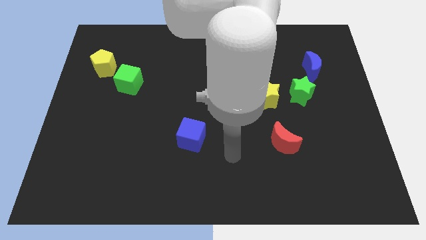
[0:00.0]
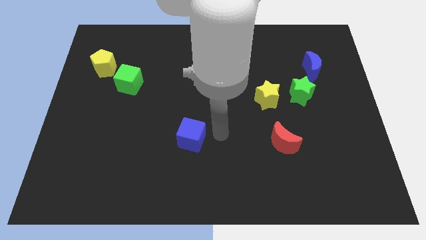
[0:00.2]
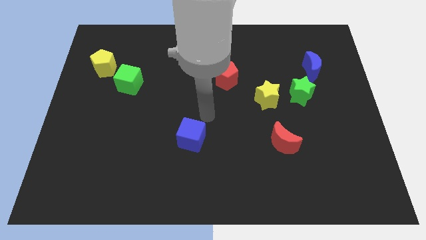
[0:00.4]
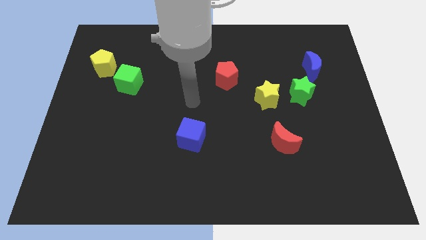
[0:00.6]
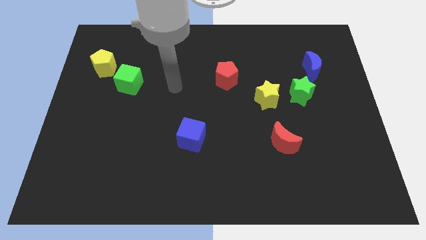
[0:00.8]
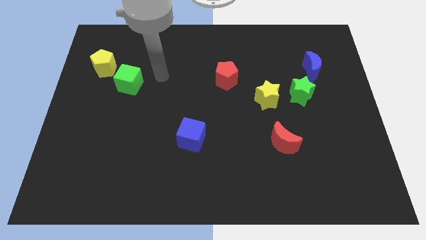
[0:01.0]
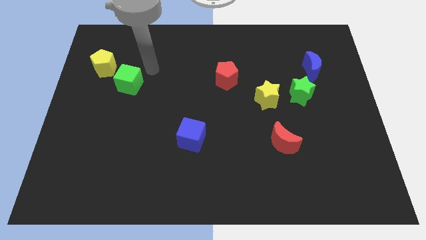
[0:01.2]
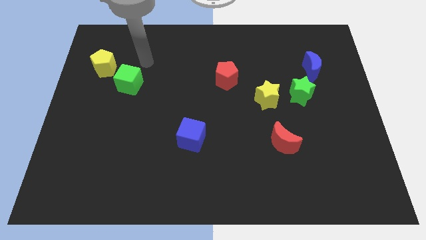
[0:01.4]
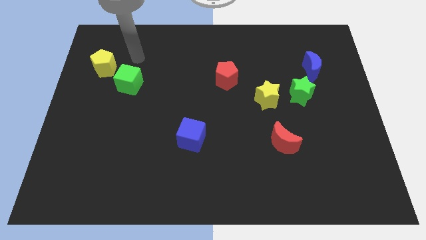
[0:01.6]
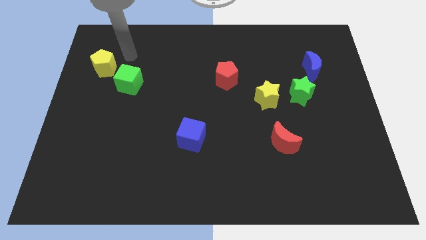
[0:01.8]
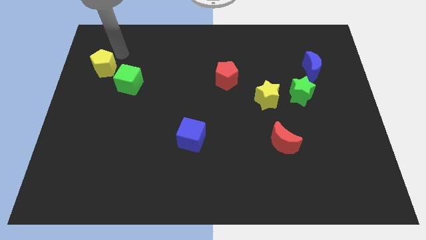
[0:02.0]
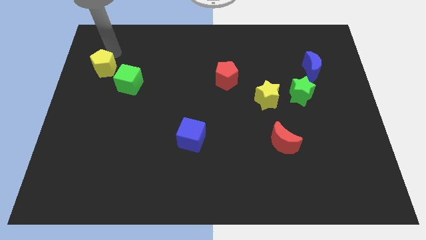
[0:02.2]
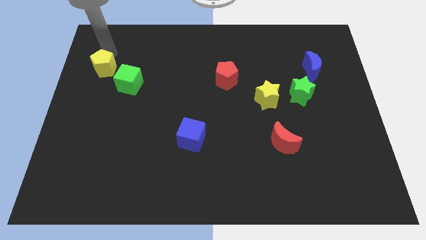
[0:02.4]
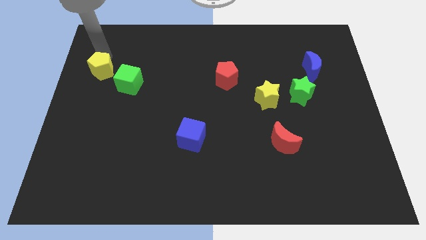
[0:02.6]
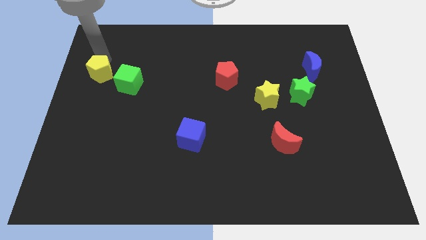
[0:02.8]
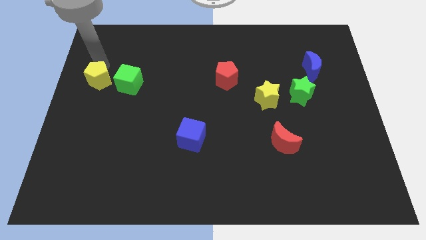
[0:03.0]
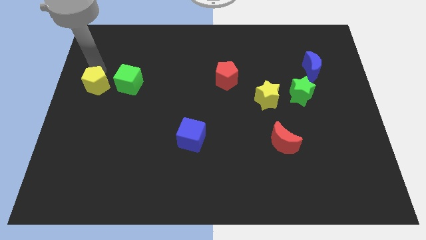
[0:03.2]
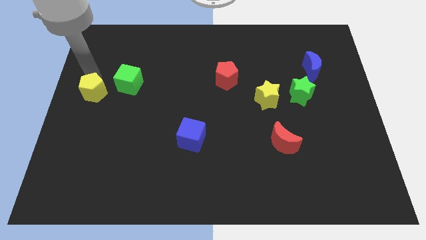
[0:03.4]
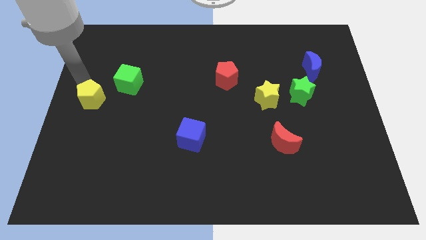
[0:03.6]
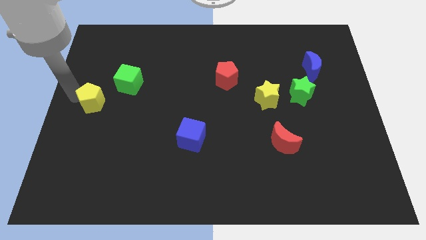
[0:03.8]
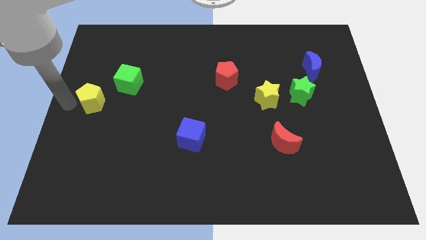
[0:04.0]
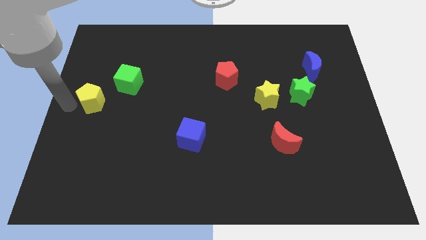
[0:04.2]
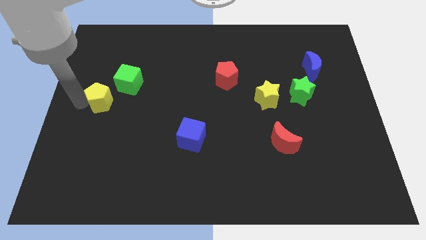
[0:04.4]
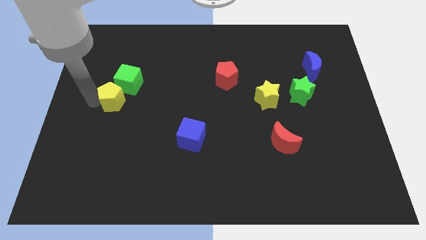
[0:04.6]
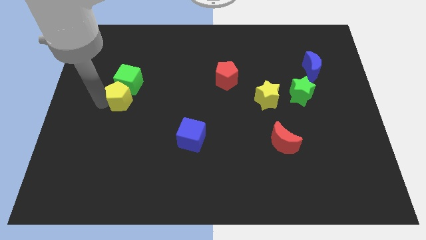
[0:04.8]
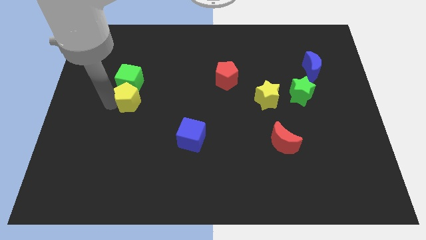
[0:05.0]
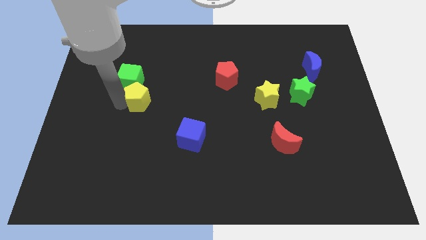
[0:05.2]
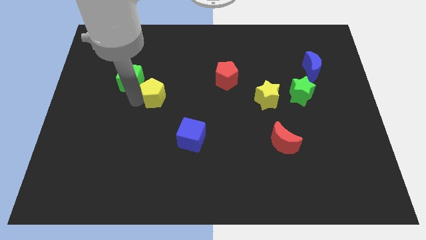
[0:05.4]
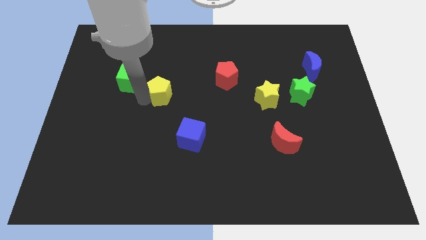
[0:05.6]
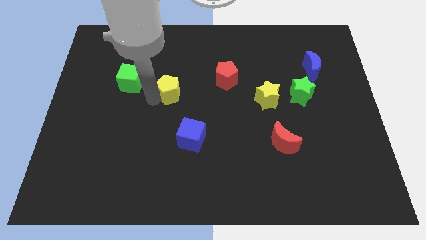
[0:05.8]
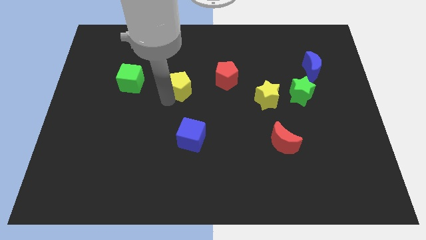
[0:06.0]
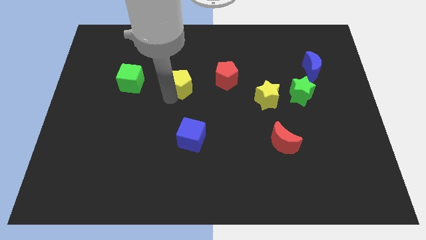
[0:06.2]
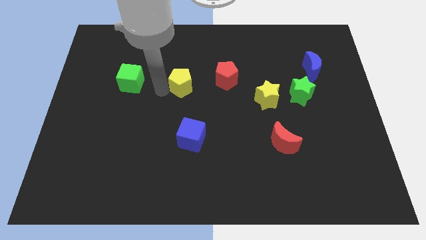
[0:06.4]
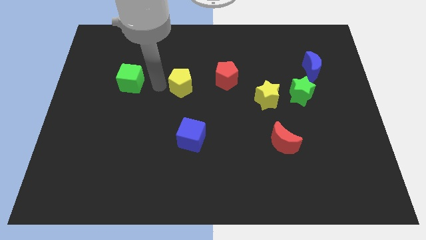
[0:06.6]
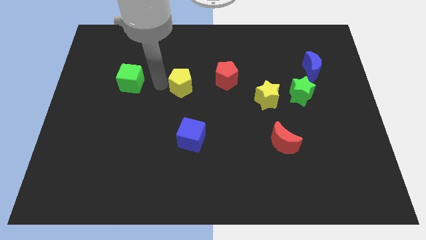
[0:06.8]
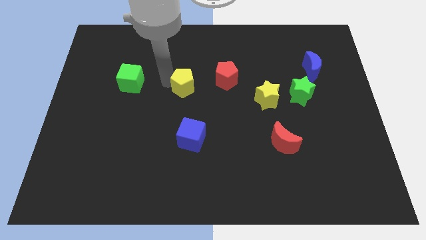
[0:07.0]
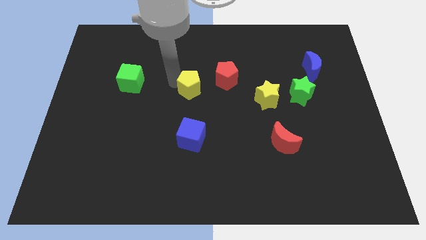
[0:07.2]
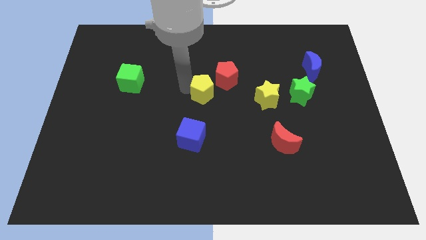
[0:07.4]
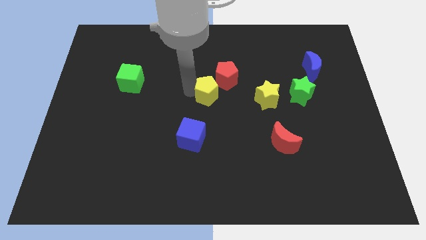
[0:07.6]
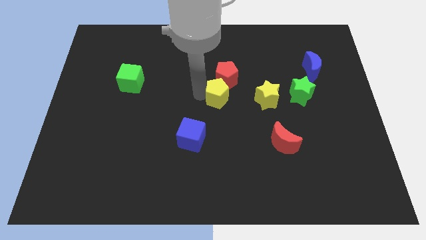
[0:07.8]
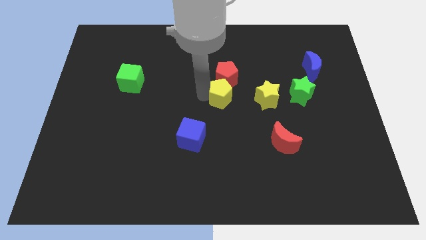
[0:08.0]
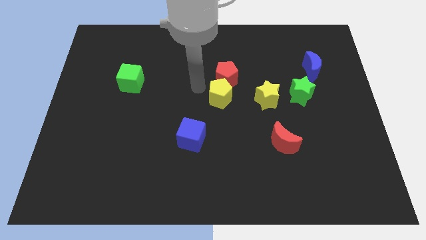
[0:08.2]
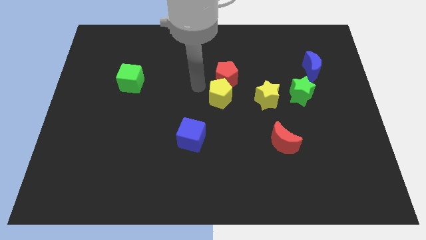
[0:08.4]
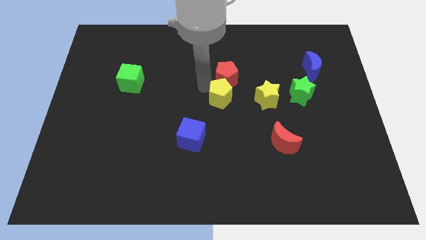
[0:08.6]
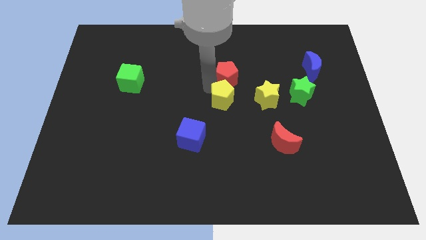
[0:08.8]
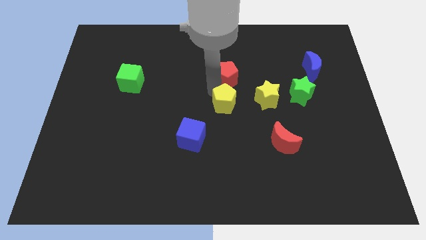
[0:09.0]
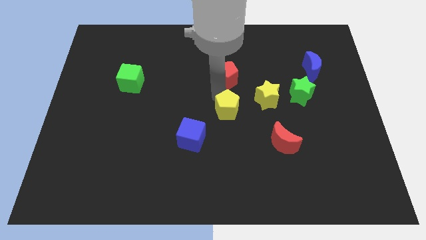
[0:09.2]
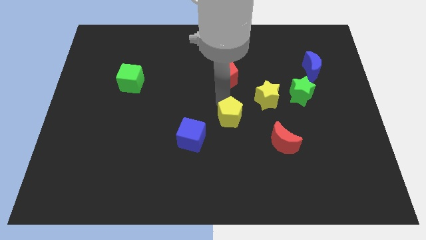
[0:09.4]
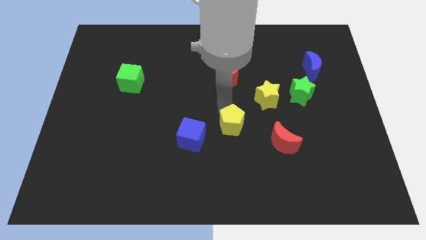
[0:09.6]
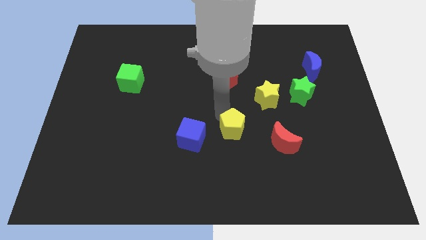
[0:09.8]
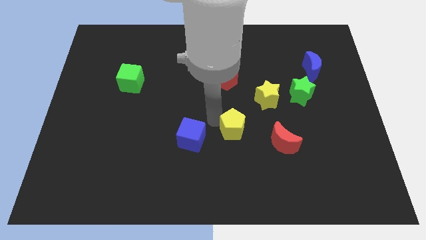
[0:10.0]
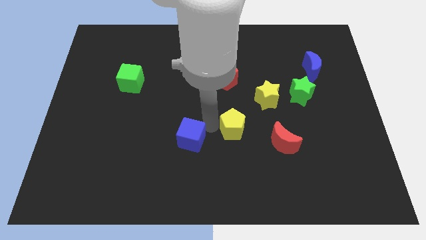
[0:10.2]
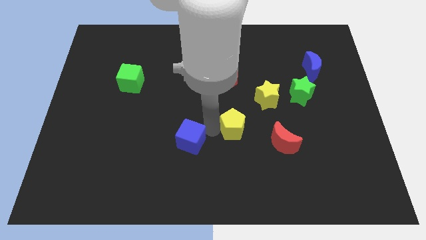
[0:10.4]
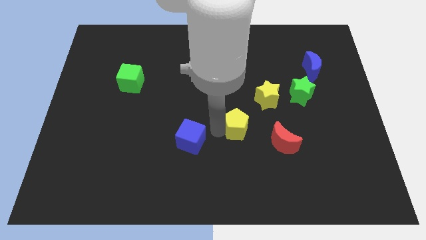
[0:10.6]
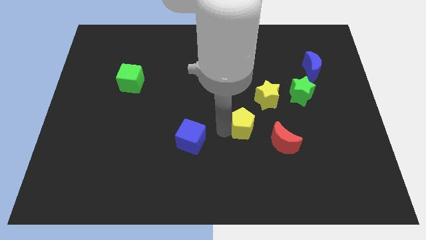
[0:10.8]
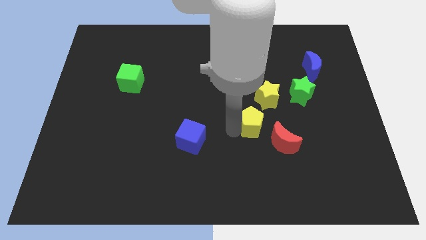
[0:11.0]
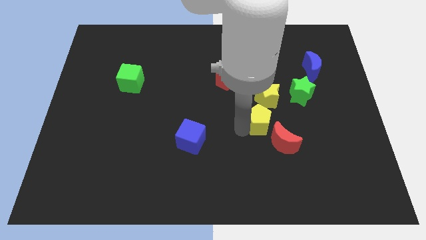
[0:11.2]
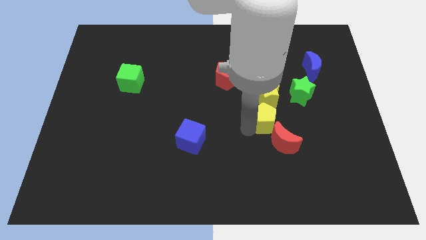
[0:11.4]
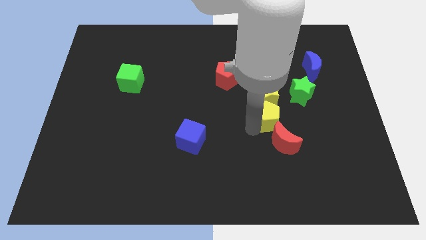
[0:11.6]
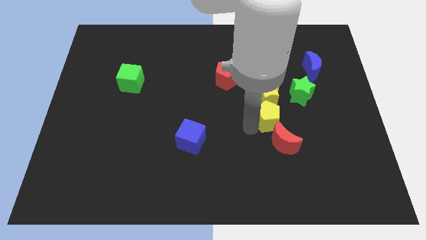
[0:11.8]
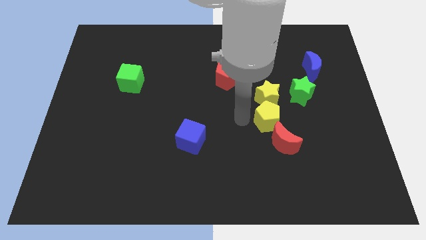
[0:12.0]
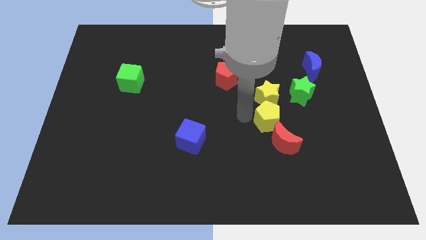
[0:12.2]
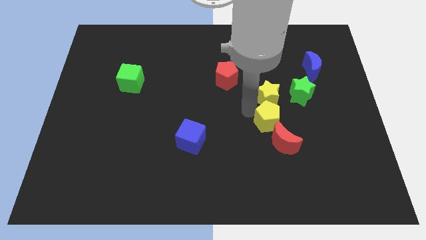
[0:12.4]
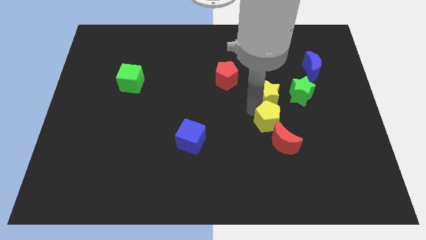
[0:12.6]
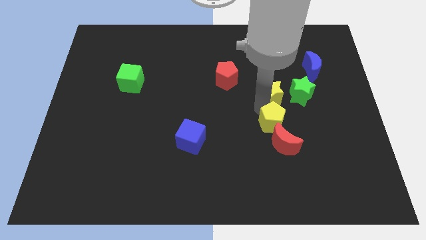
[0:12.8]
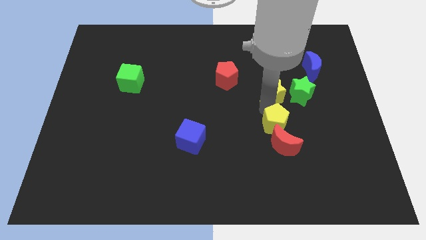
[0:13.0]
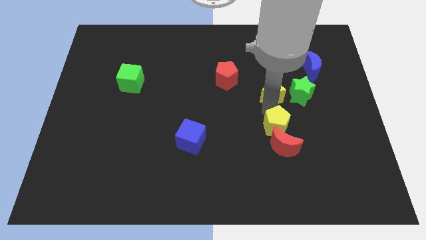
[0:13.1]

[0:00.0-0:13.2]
put the yellow pentagon towards the red moon

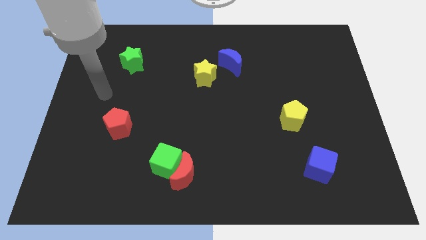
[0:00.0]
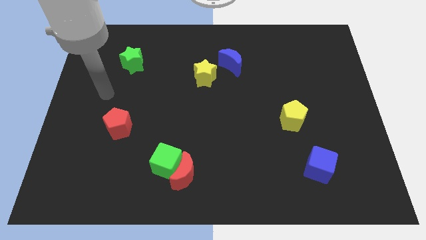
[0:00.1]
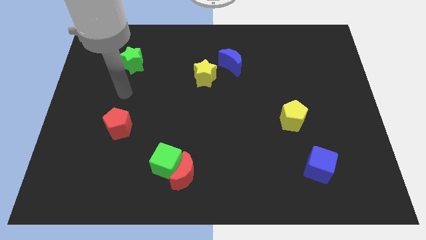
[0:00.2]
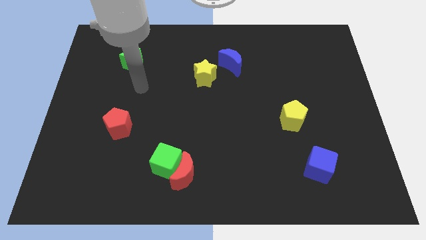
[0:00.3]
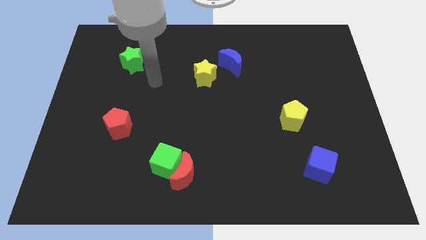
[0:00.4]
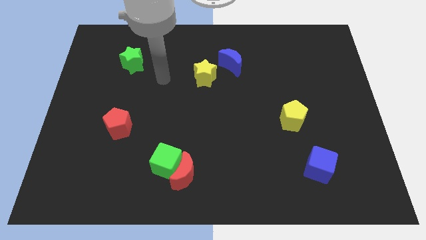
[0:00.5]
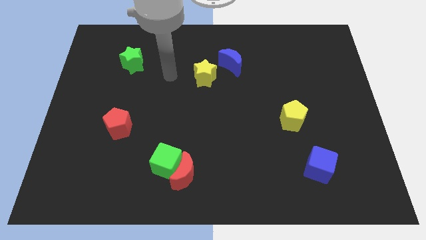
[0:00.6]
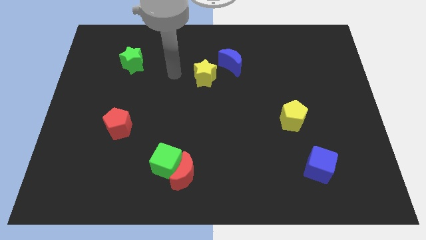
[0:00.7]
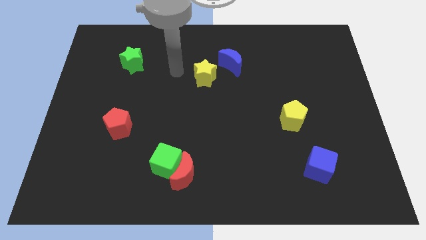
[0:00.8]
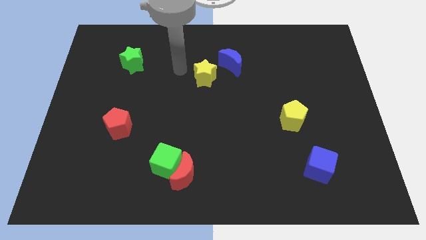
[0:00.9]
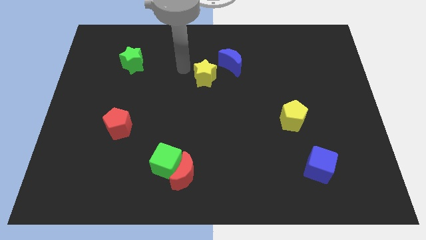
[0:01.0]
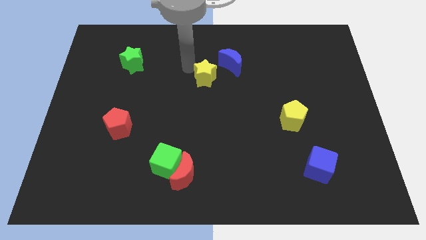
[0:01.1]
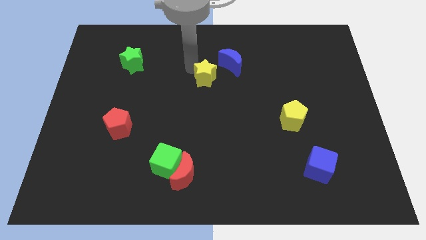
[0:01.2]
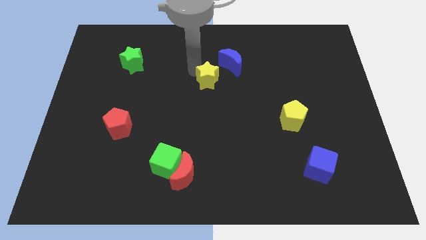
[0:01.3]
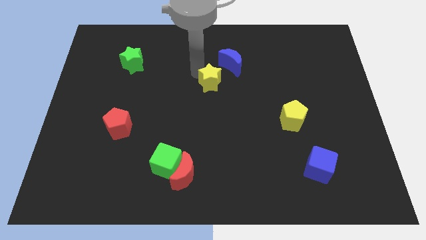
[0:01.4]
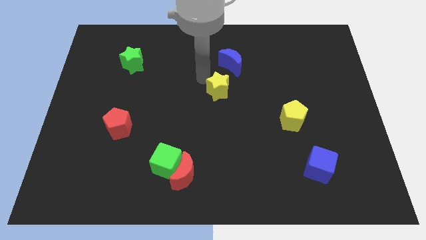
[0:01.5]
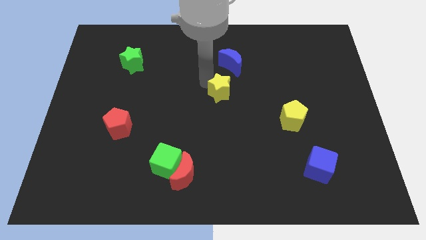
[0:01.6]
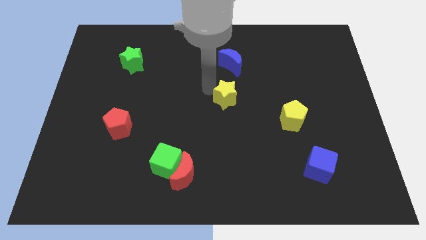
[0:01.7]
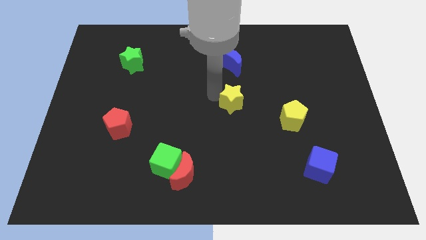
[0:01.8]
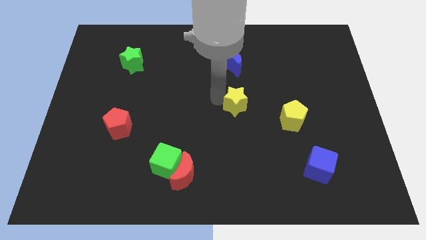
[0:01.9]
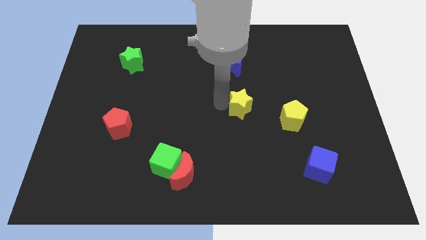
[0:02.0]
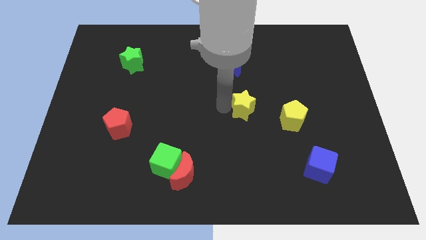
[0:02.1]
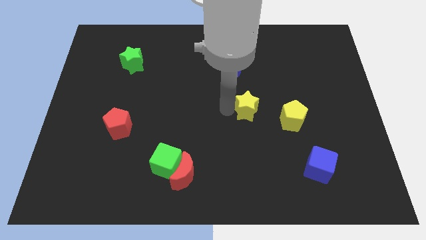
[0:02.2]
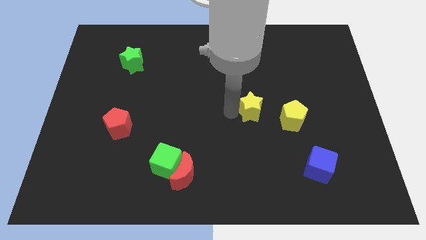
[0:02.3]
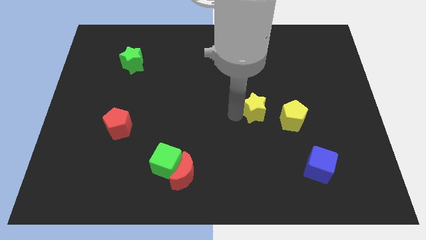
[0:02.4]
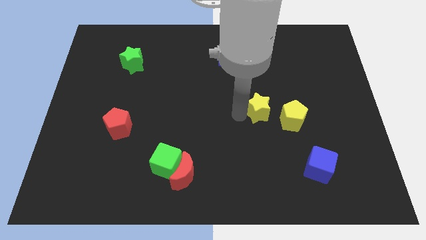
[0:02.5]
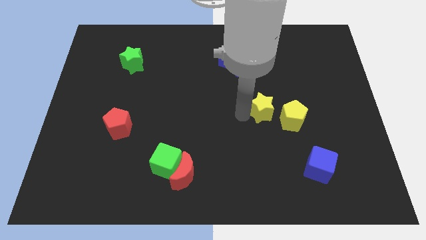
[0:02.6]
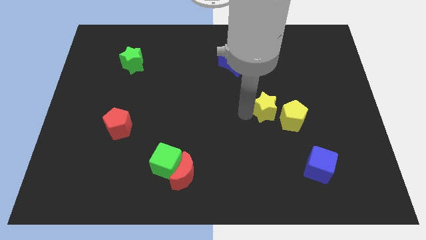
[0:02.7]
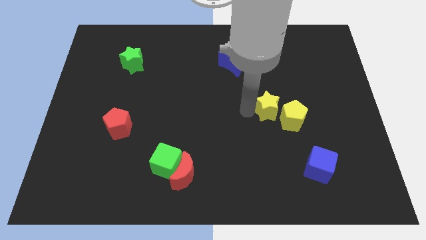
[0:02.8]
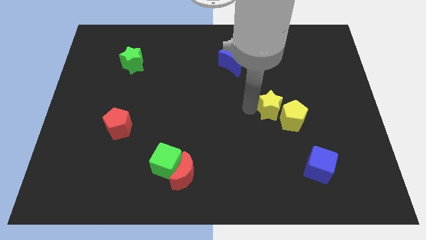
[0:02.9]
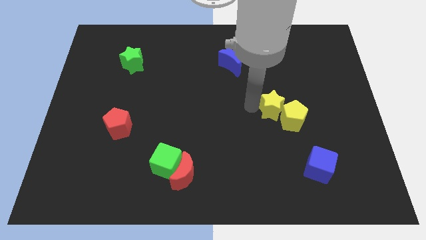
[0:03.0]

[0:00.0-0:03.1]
move the yellow star close to the yellow pentagon
